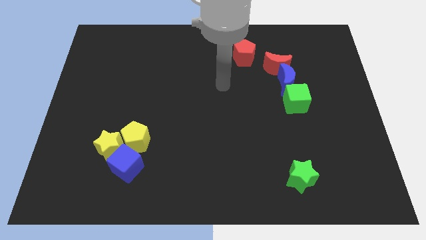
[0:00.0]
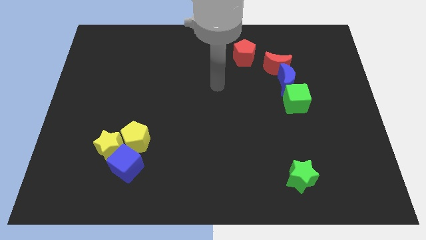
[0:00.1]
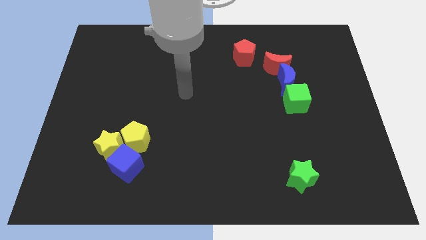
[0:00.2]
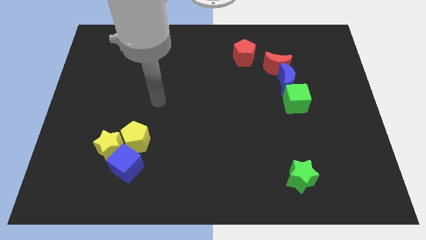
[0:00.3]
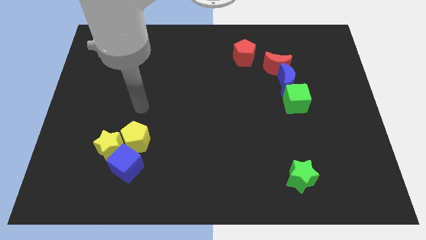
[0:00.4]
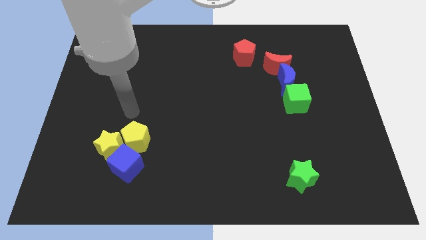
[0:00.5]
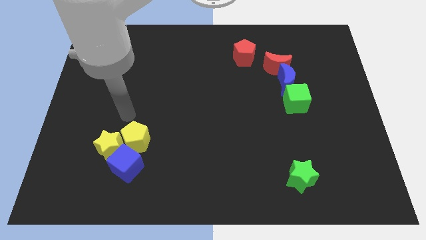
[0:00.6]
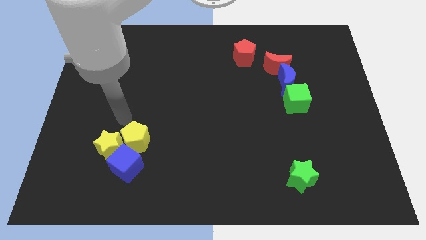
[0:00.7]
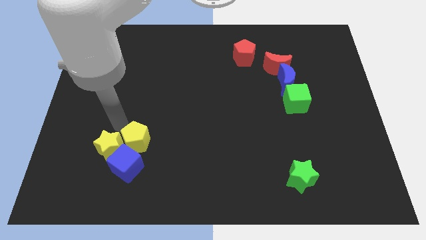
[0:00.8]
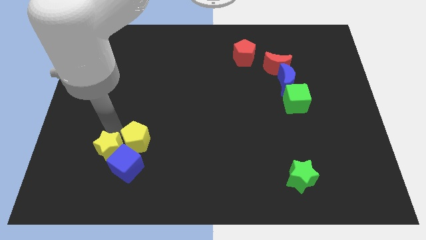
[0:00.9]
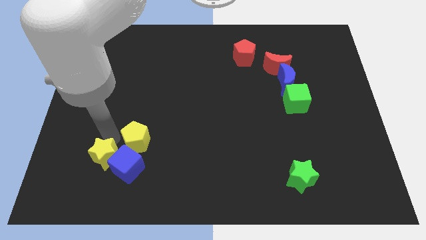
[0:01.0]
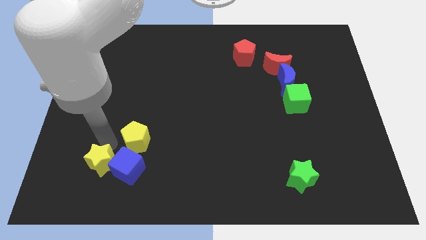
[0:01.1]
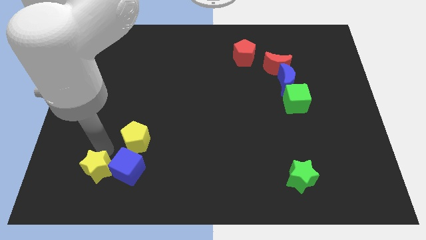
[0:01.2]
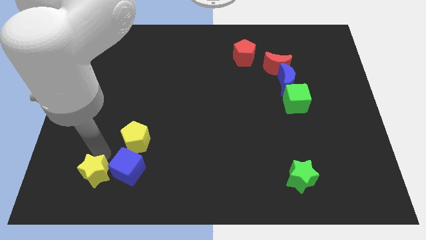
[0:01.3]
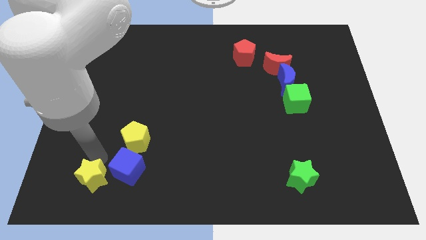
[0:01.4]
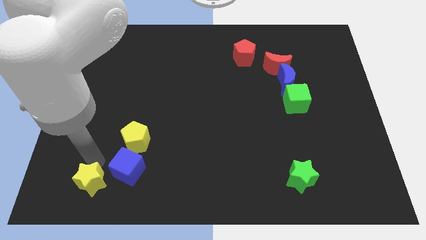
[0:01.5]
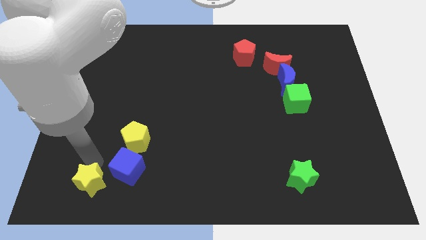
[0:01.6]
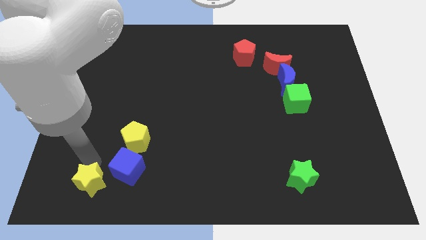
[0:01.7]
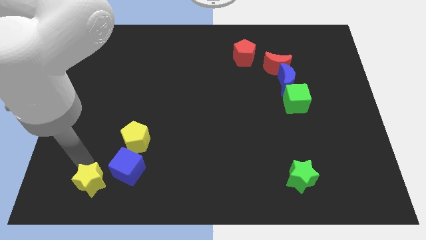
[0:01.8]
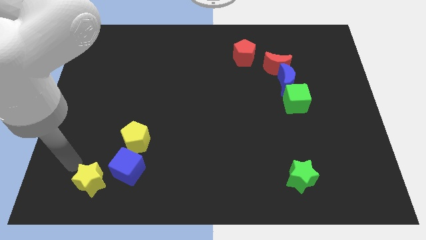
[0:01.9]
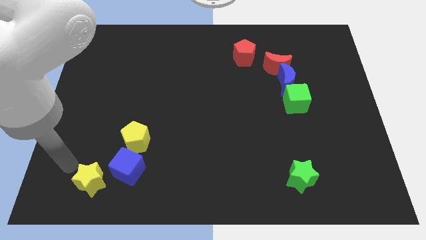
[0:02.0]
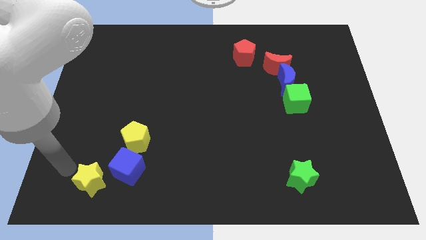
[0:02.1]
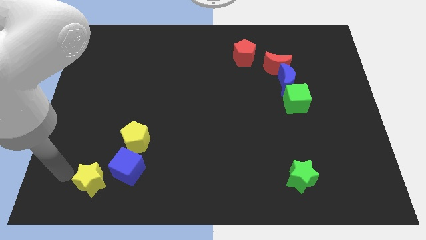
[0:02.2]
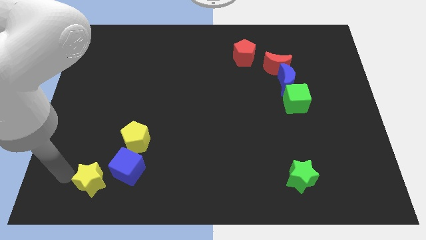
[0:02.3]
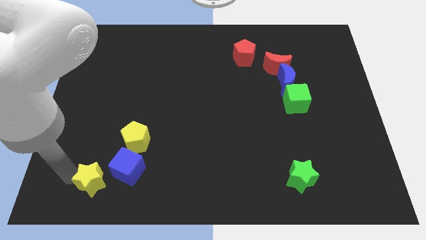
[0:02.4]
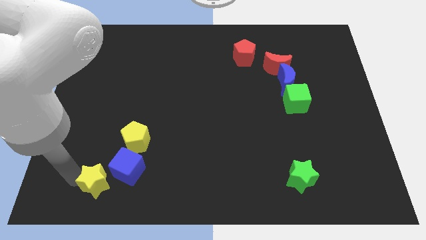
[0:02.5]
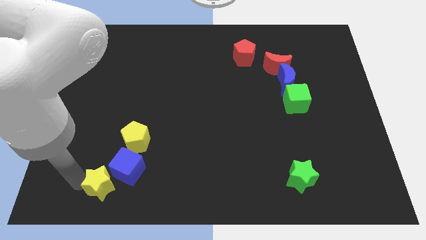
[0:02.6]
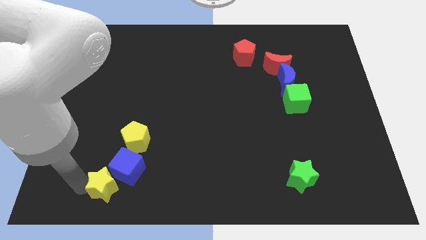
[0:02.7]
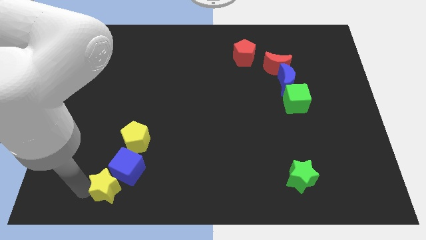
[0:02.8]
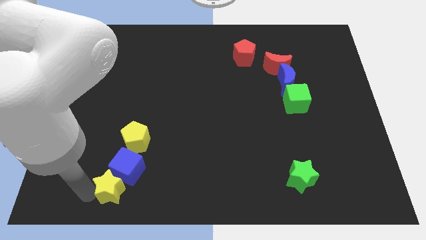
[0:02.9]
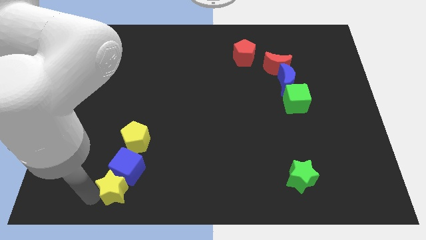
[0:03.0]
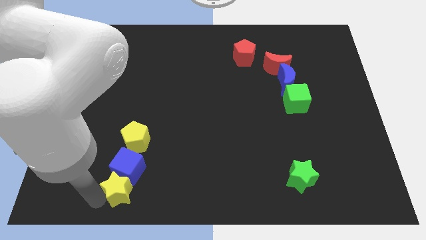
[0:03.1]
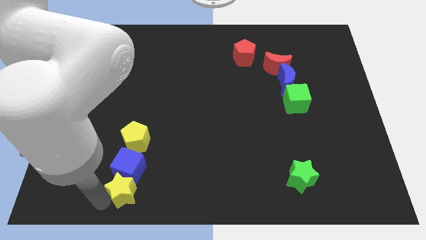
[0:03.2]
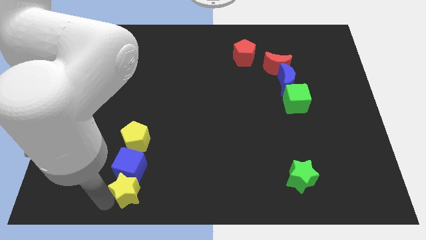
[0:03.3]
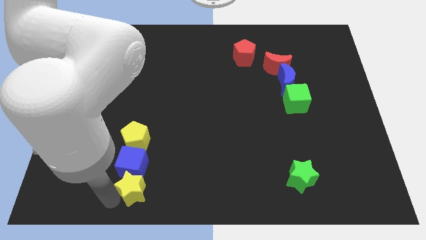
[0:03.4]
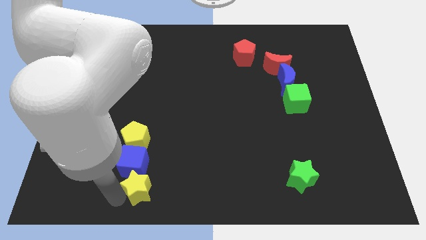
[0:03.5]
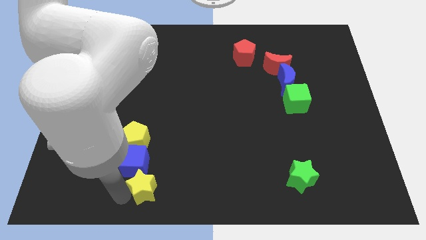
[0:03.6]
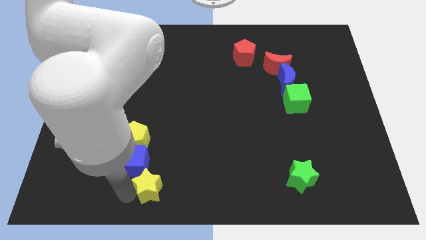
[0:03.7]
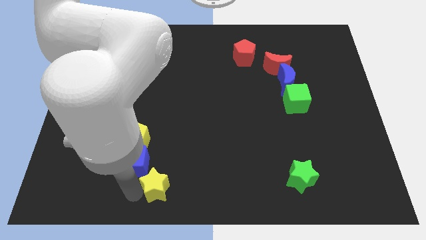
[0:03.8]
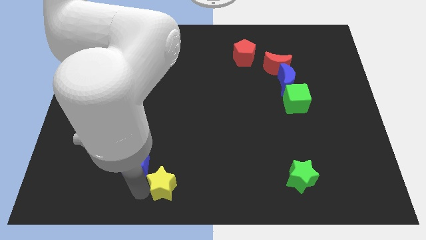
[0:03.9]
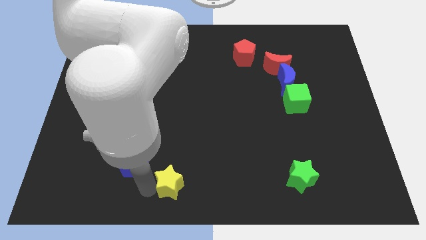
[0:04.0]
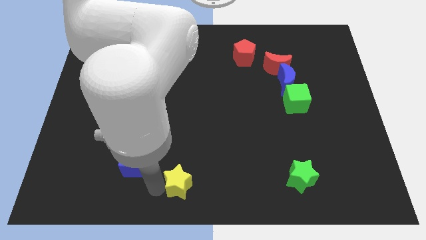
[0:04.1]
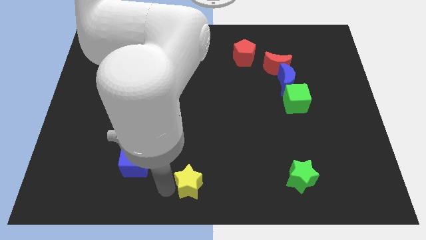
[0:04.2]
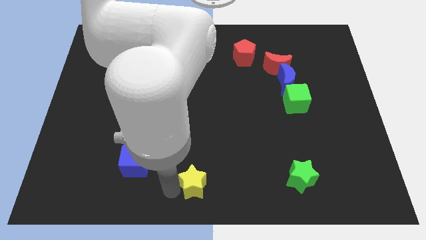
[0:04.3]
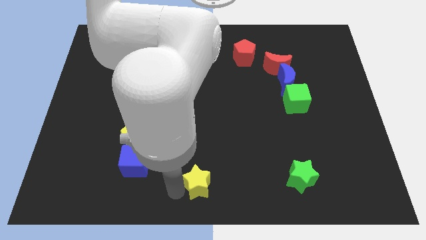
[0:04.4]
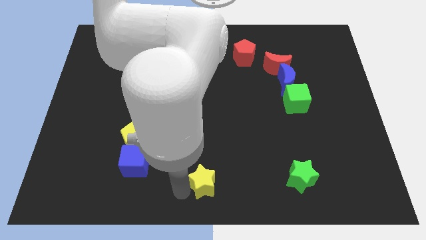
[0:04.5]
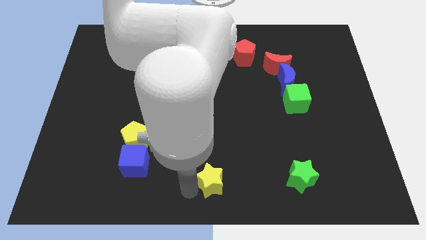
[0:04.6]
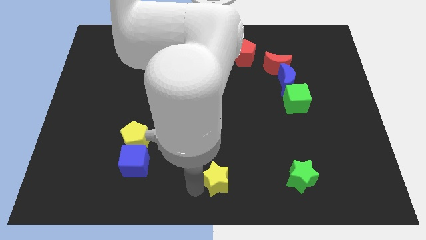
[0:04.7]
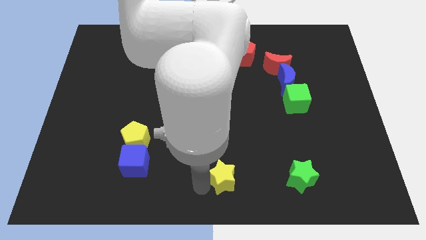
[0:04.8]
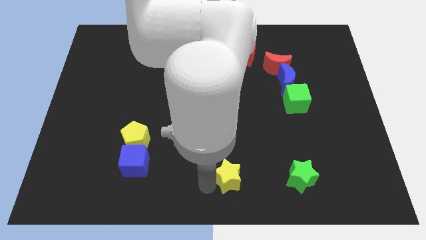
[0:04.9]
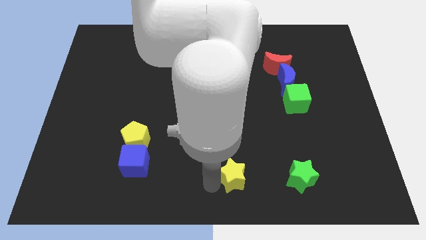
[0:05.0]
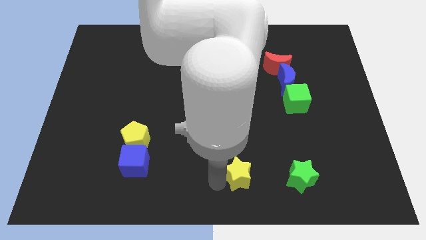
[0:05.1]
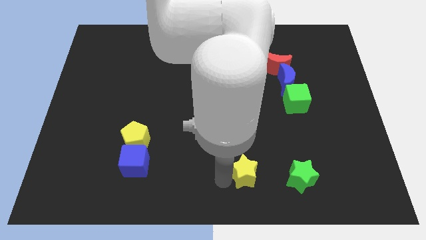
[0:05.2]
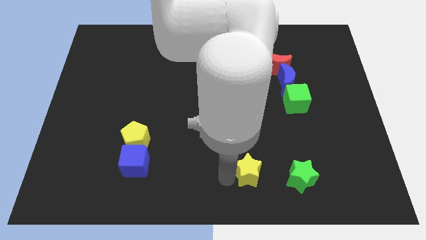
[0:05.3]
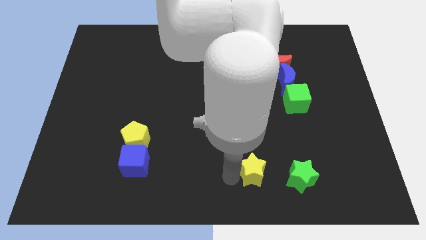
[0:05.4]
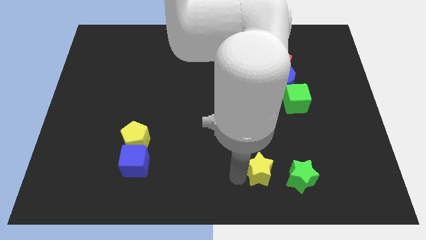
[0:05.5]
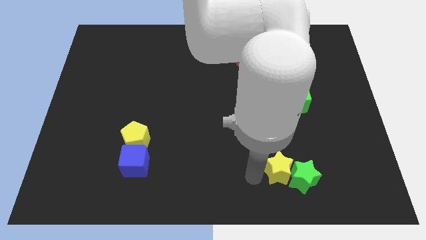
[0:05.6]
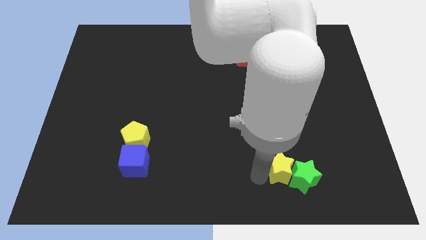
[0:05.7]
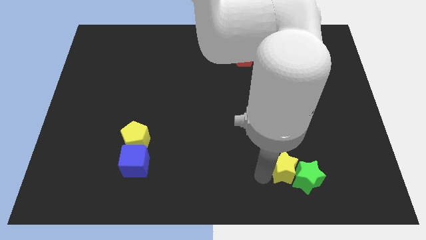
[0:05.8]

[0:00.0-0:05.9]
put the yellow star next to the green star

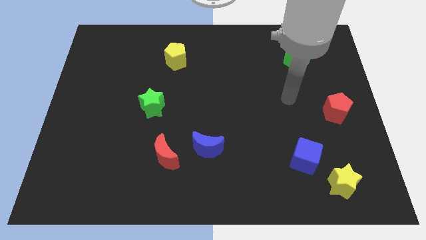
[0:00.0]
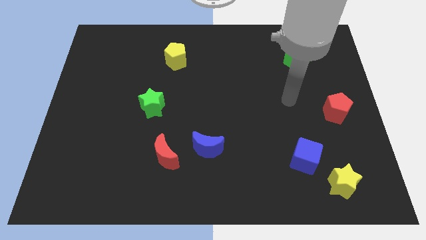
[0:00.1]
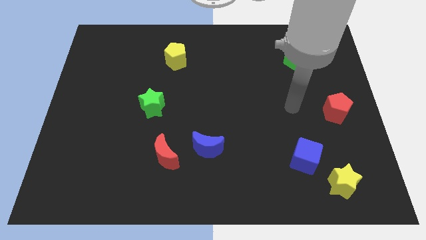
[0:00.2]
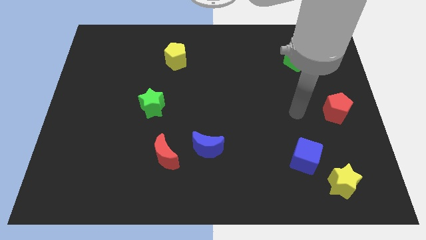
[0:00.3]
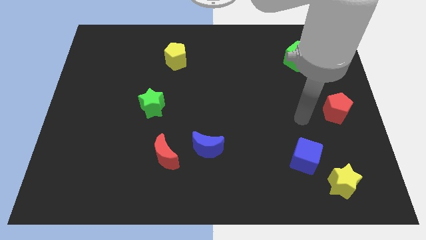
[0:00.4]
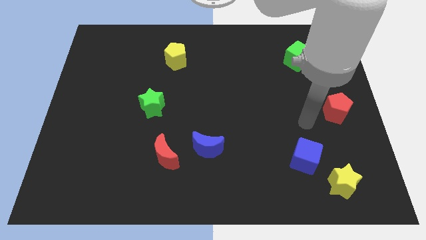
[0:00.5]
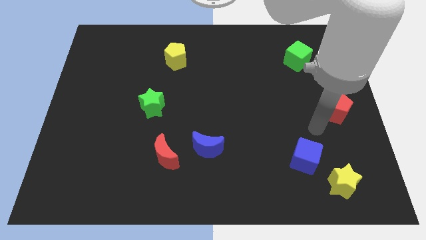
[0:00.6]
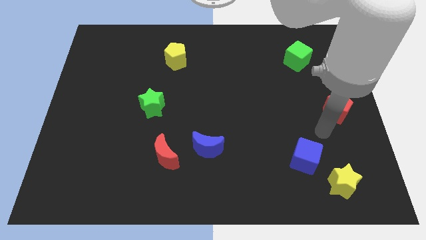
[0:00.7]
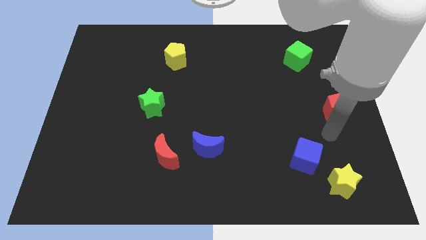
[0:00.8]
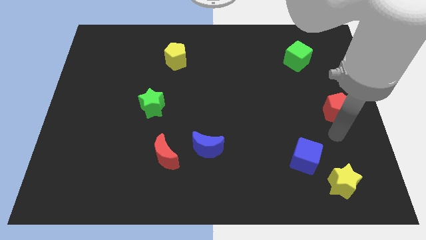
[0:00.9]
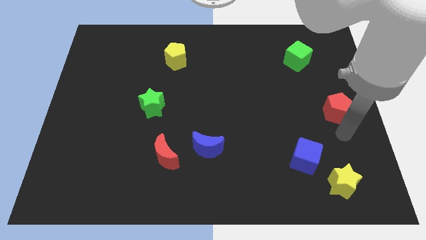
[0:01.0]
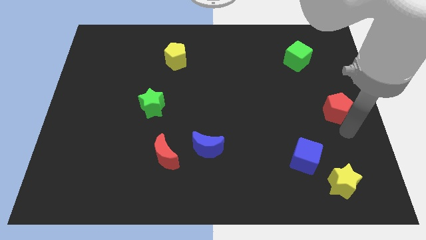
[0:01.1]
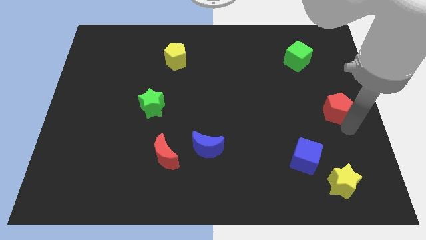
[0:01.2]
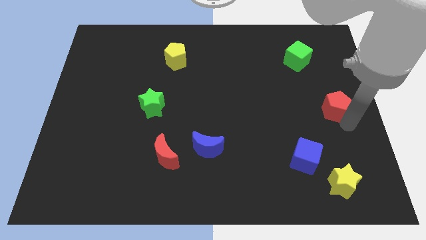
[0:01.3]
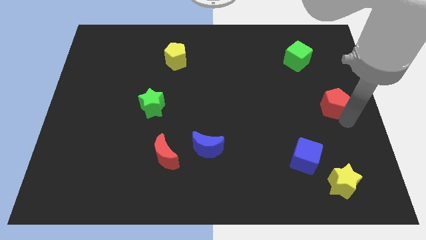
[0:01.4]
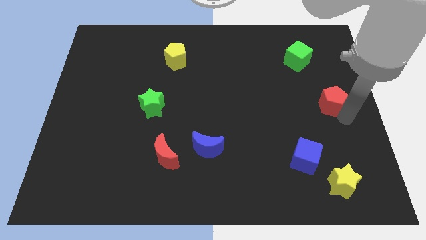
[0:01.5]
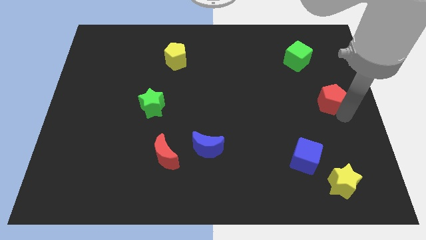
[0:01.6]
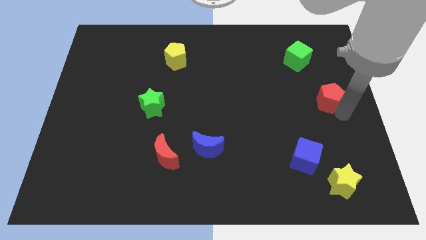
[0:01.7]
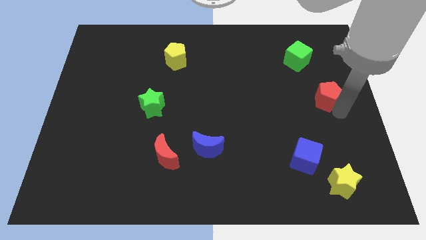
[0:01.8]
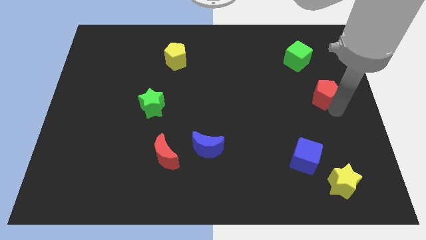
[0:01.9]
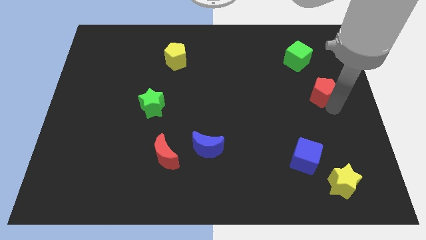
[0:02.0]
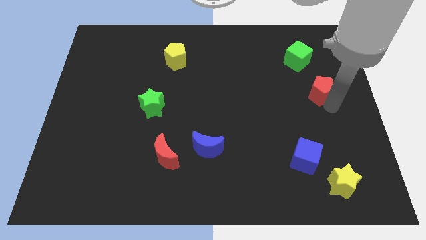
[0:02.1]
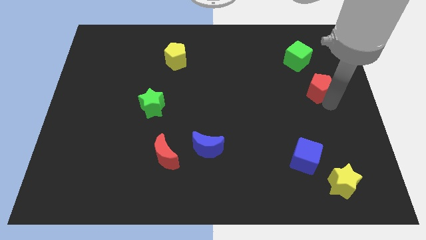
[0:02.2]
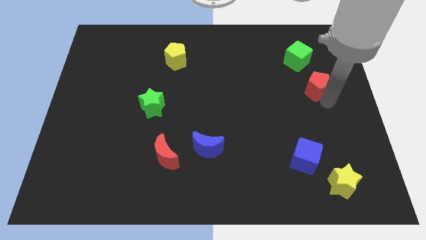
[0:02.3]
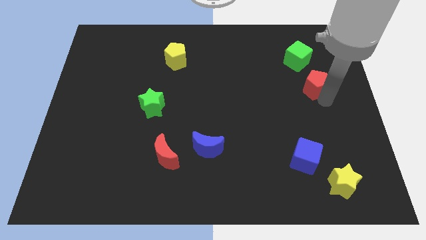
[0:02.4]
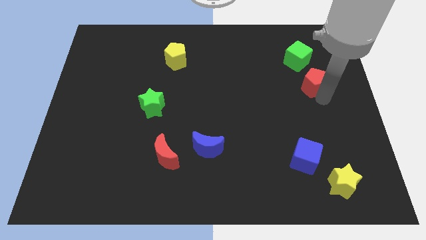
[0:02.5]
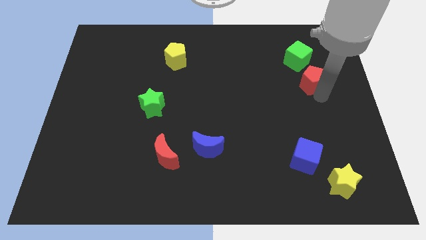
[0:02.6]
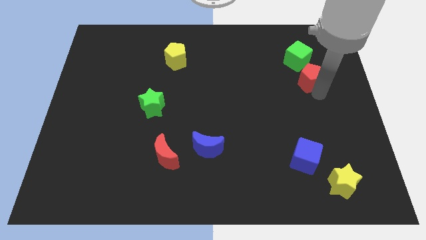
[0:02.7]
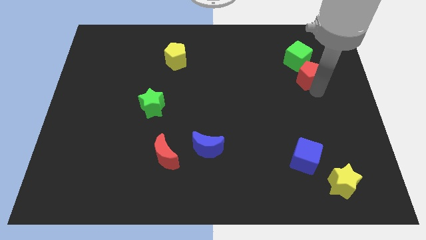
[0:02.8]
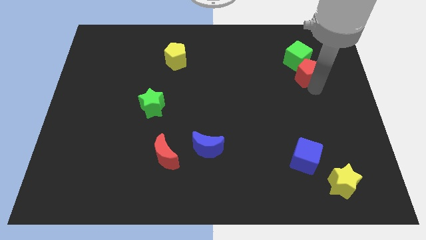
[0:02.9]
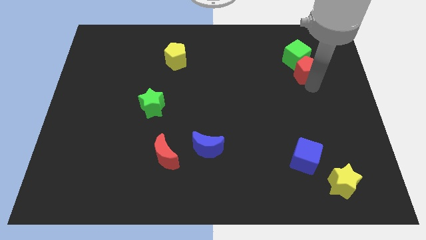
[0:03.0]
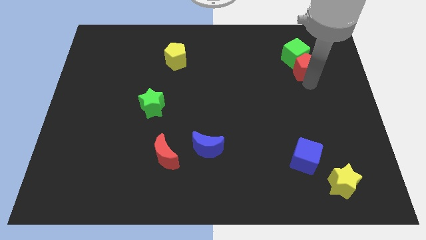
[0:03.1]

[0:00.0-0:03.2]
move the red pentagon to the green cube
